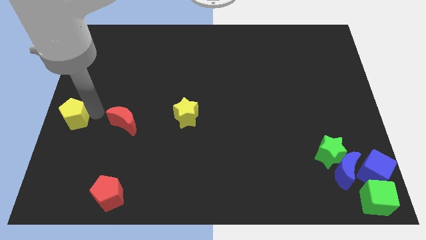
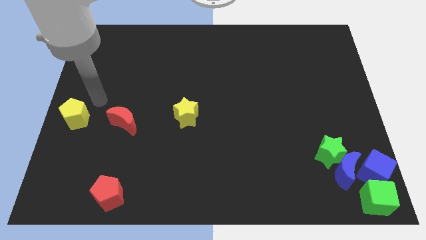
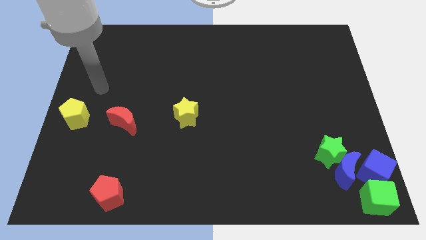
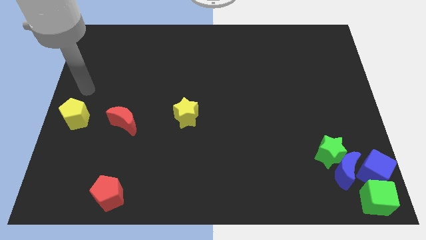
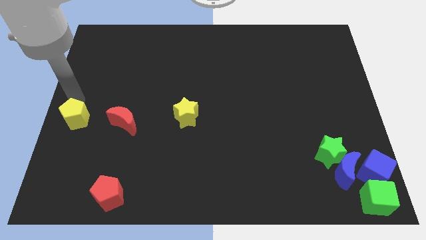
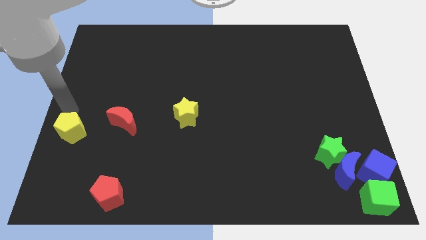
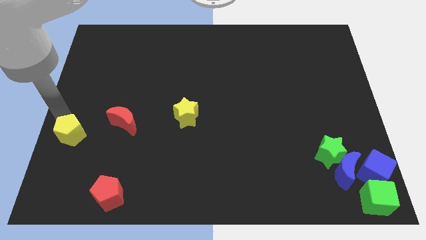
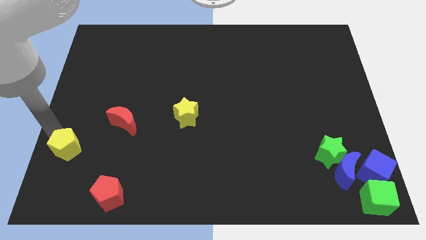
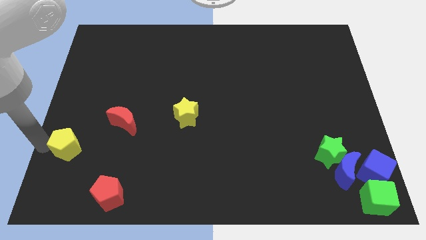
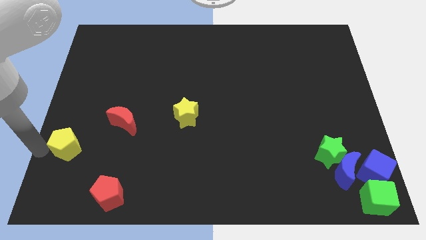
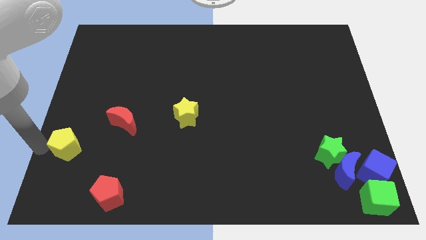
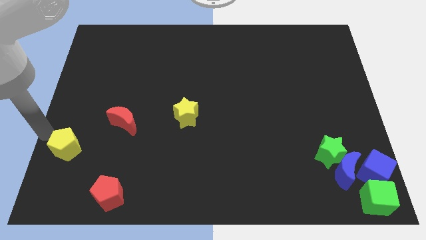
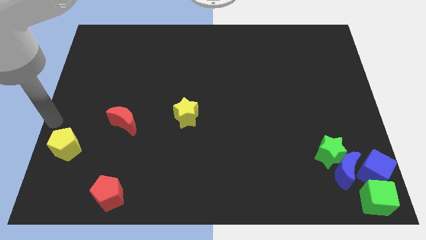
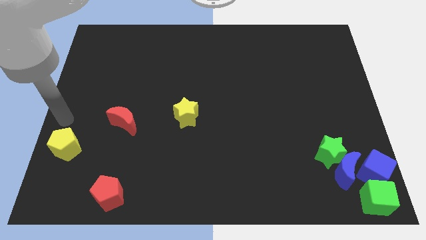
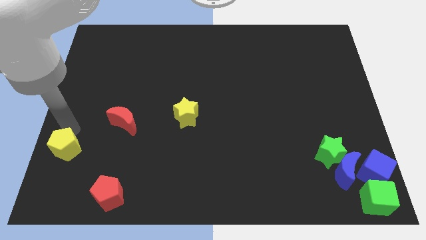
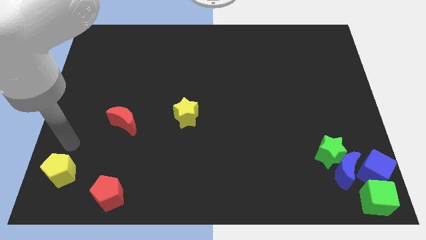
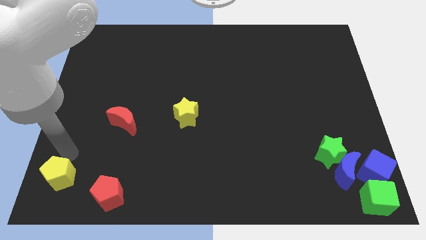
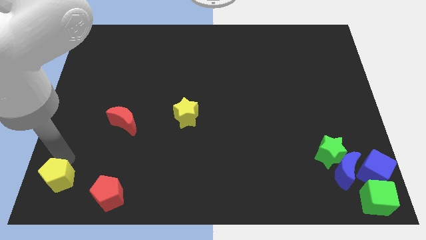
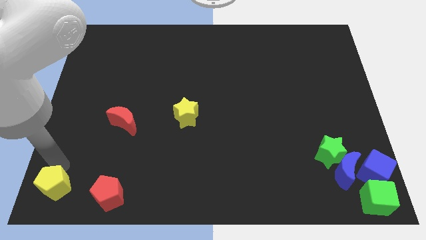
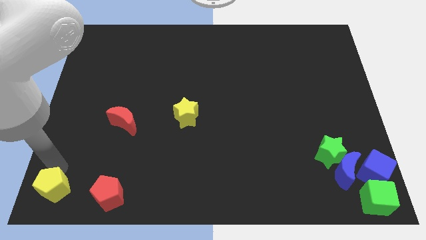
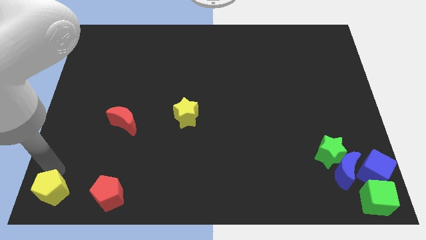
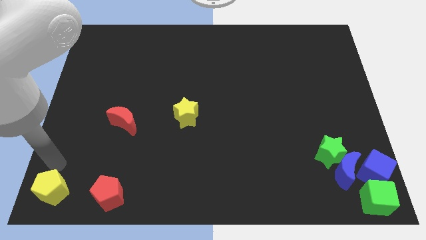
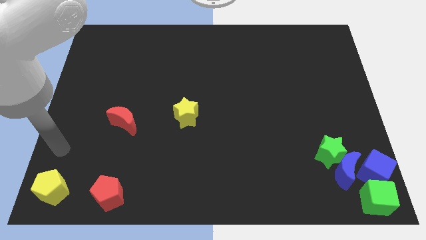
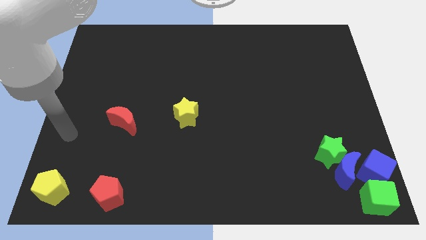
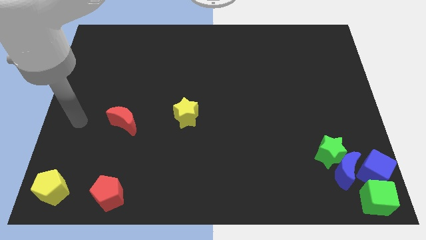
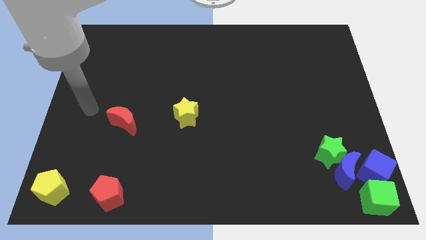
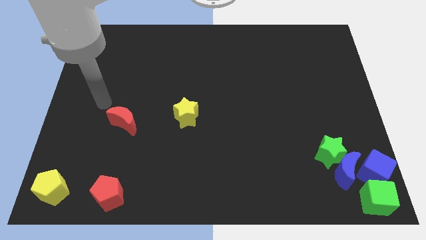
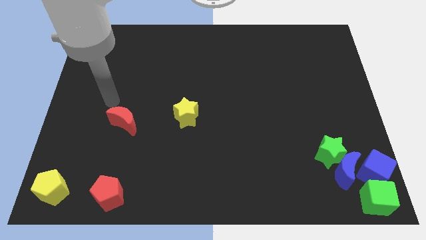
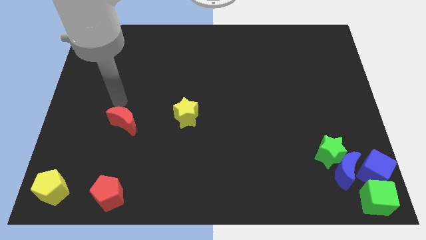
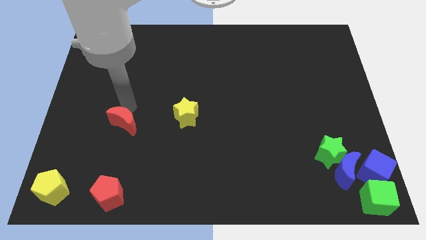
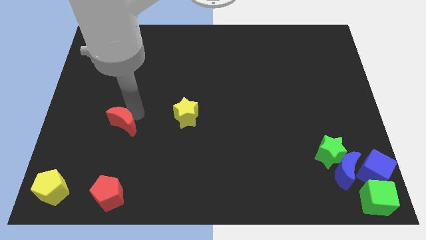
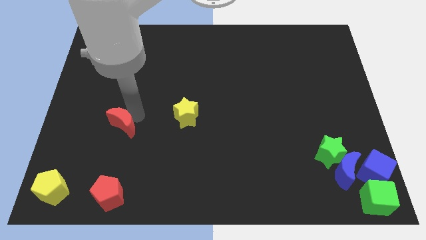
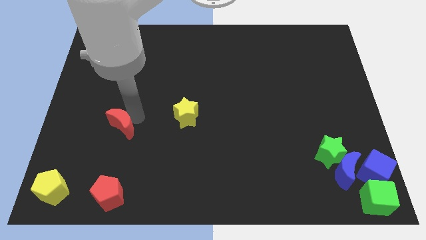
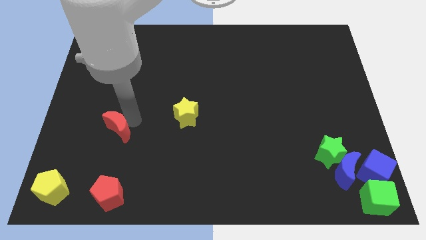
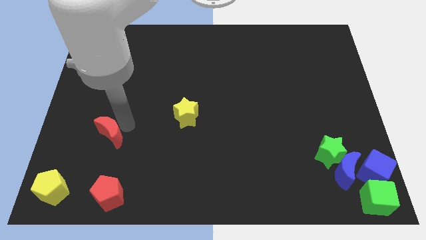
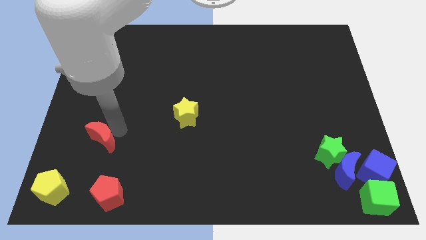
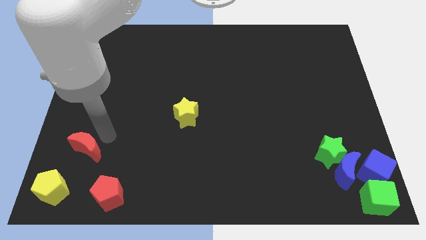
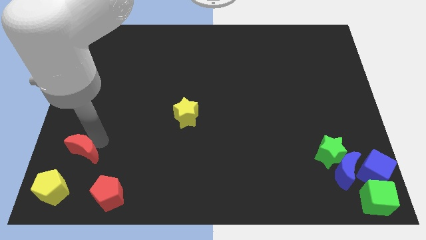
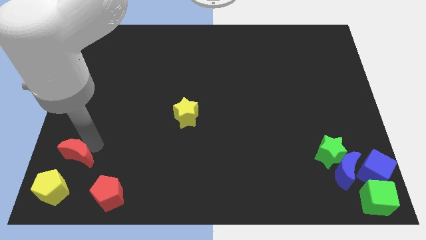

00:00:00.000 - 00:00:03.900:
form a triangle out of red blocks and the yellow pentagon

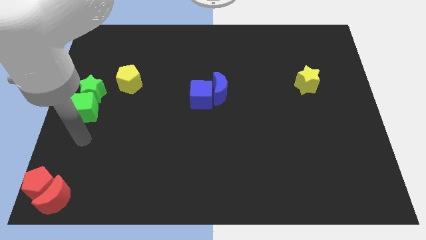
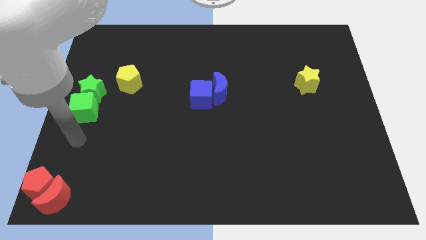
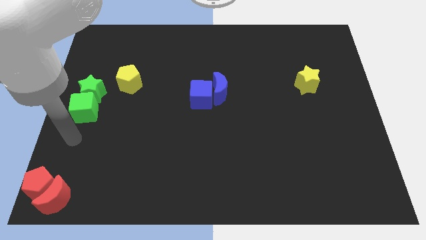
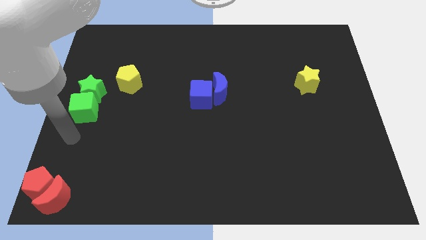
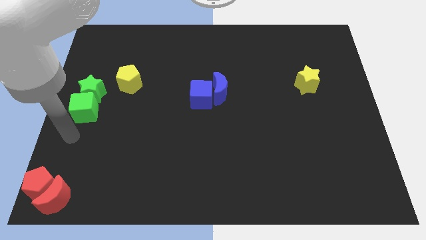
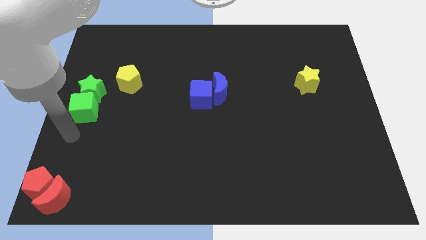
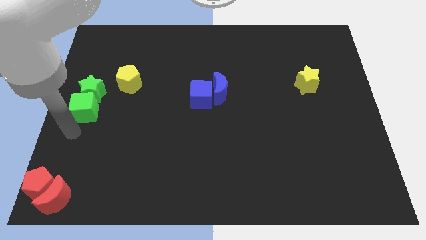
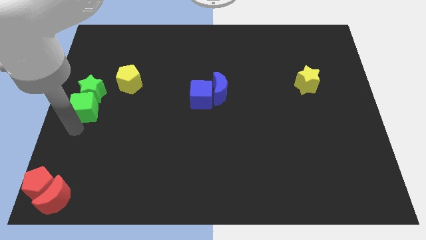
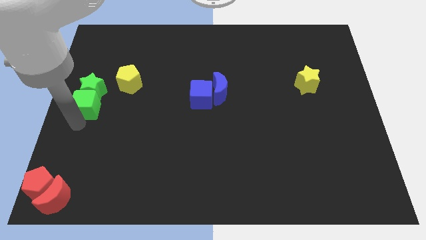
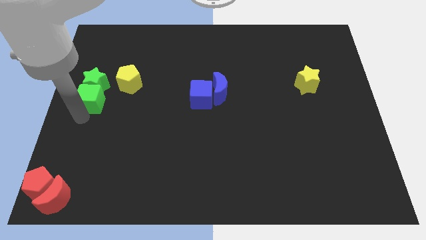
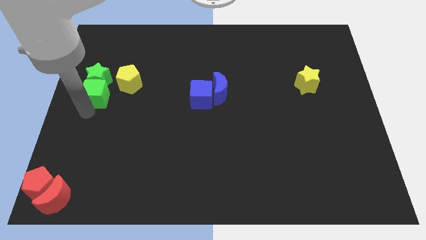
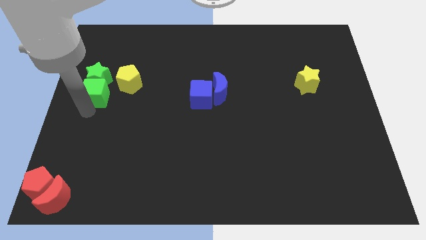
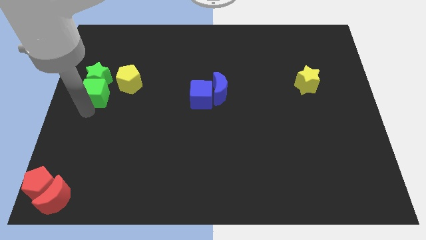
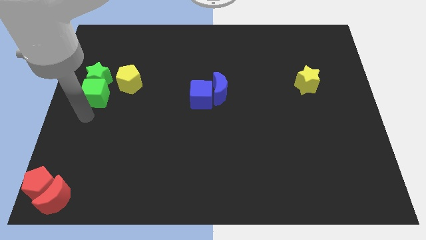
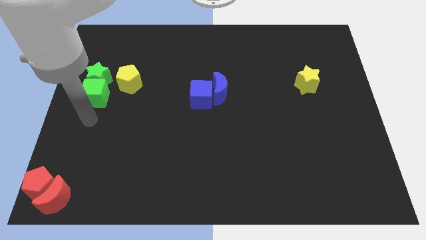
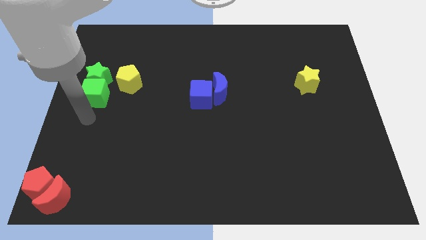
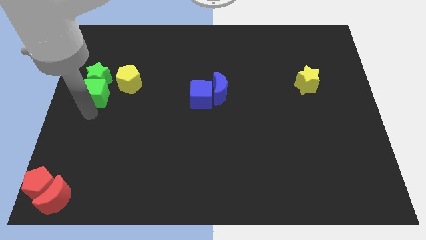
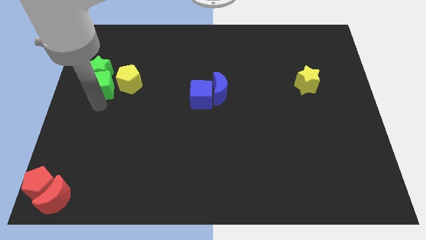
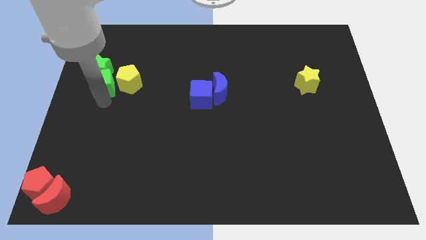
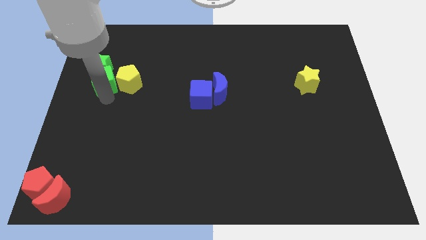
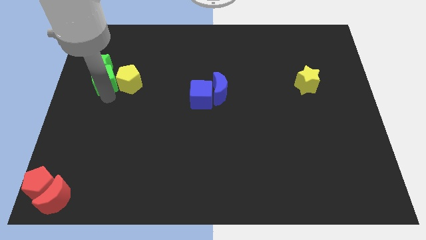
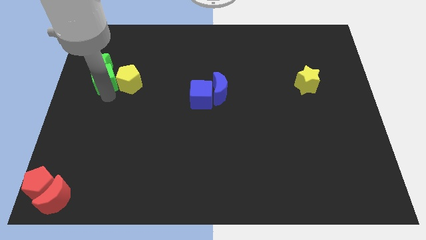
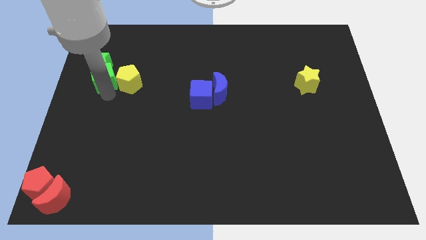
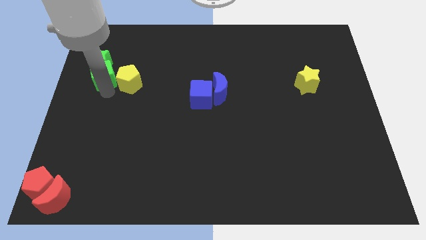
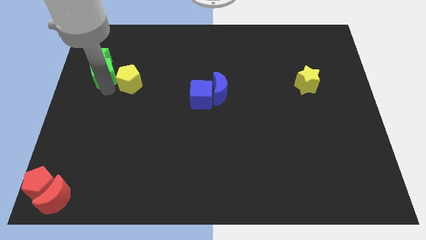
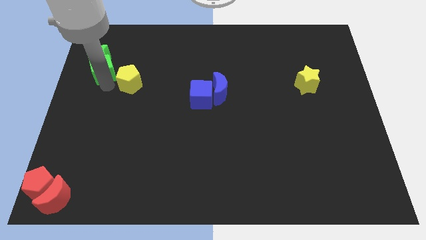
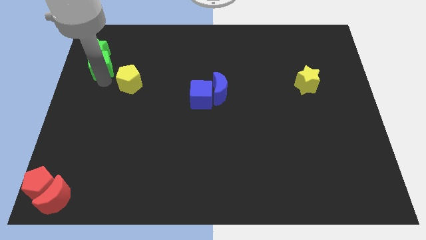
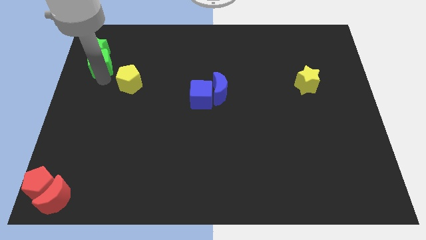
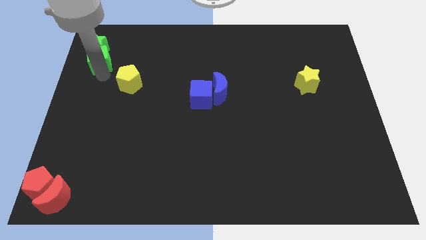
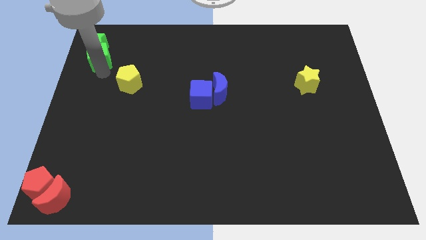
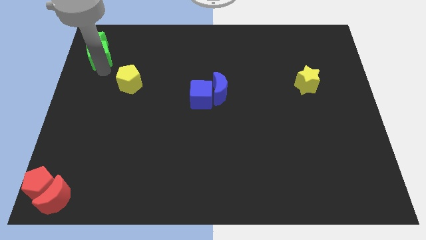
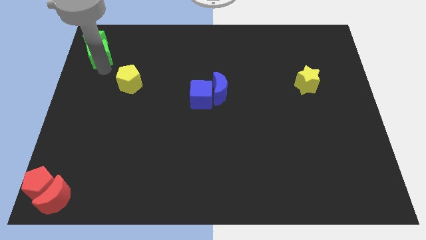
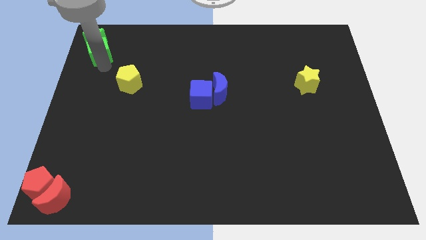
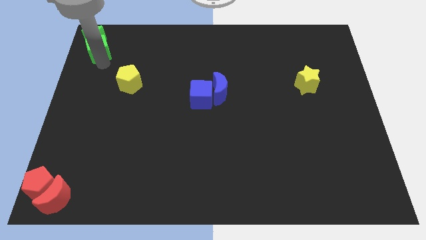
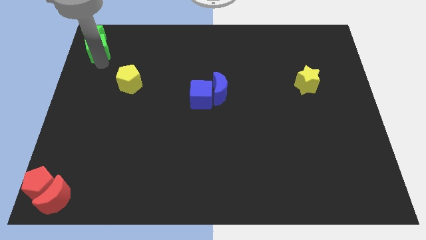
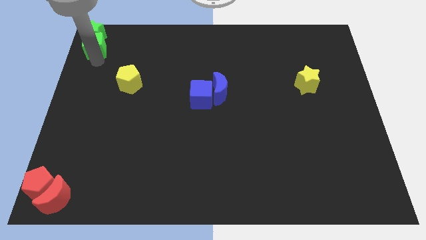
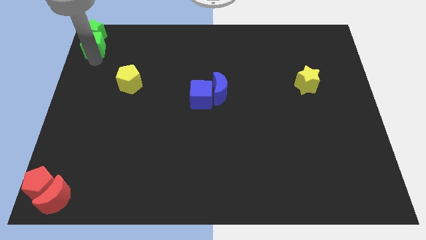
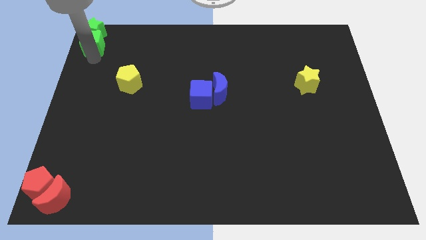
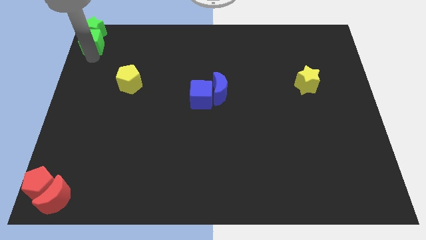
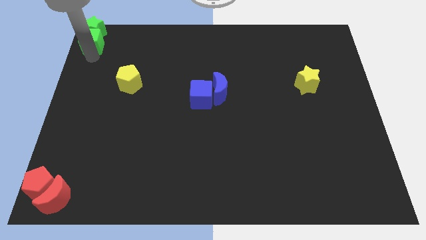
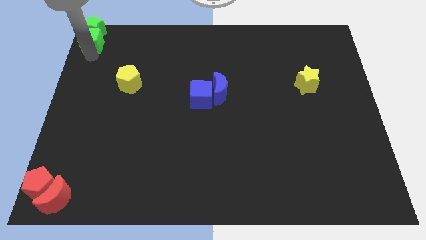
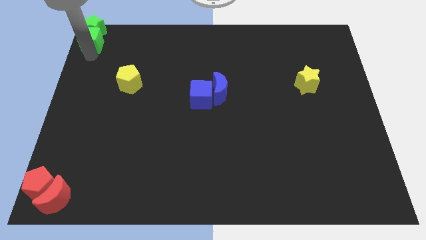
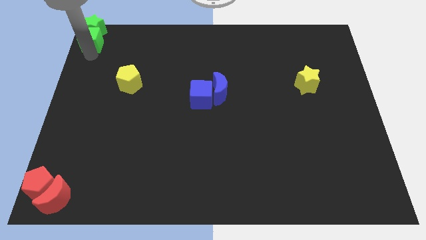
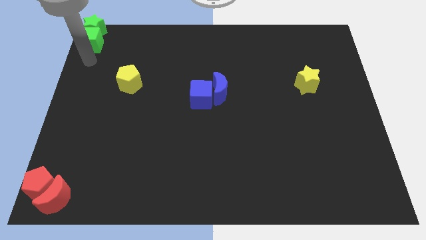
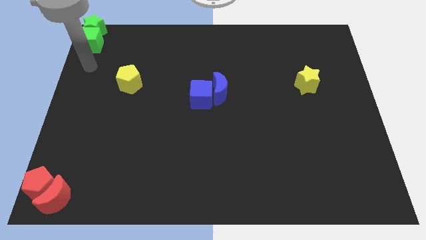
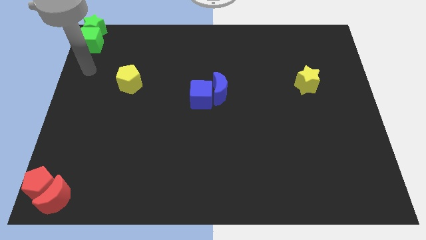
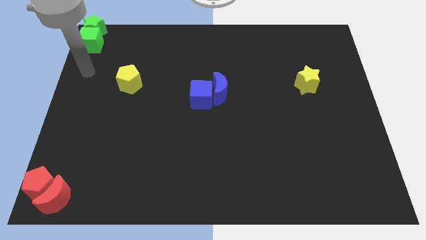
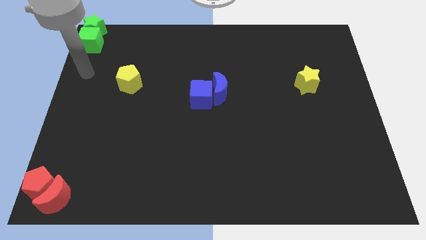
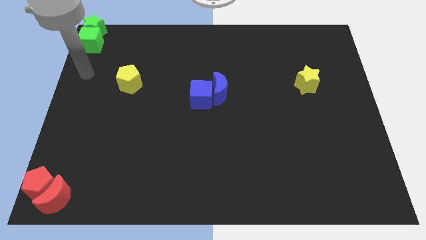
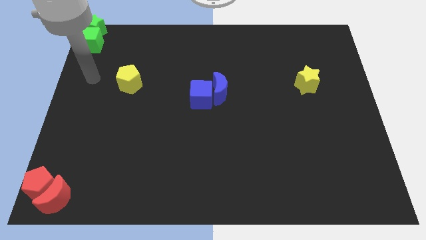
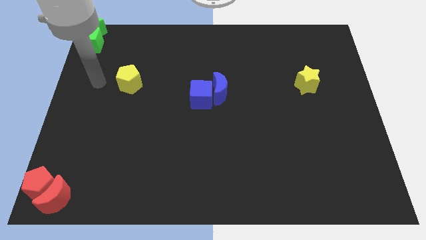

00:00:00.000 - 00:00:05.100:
slide the green blocks at the top left corner
